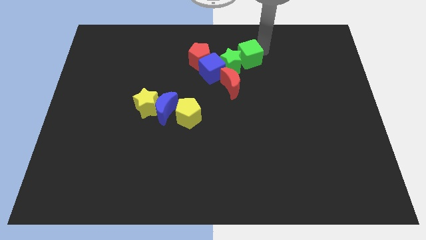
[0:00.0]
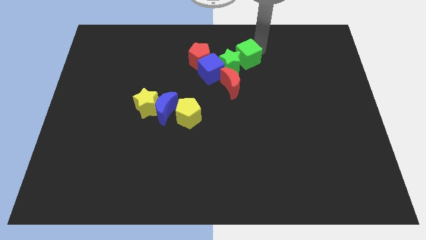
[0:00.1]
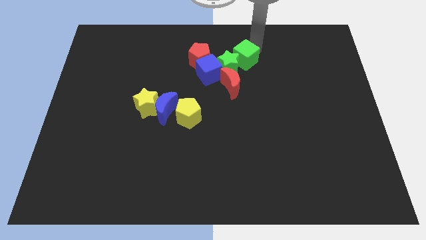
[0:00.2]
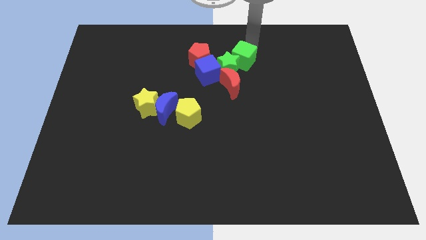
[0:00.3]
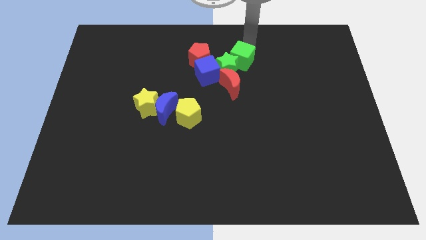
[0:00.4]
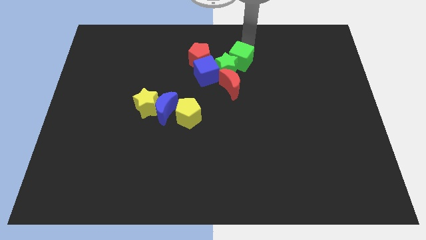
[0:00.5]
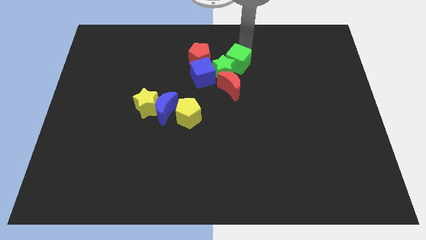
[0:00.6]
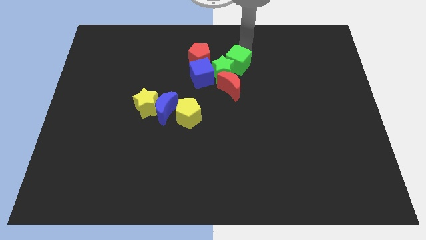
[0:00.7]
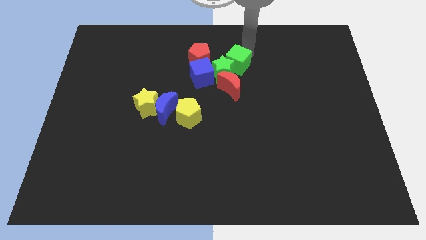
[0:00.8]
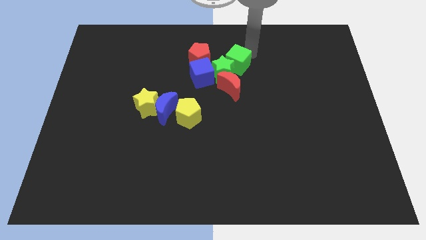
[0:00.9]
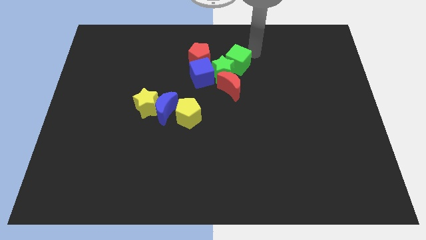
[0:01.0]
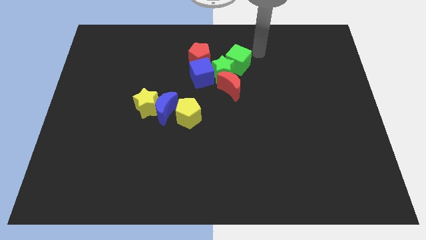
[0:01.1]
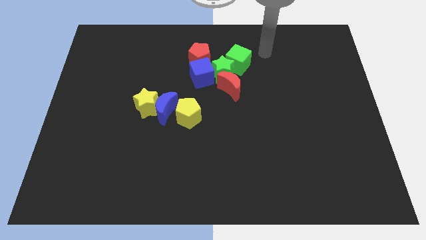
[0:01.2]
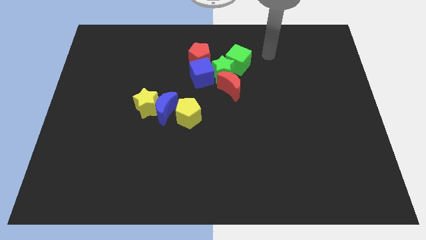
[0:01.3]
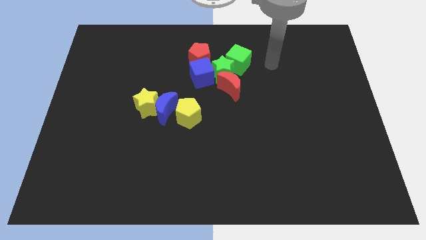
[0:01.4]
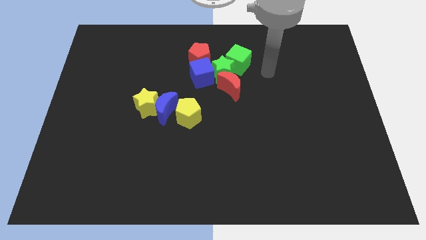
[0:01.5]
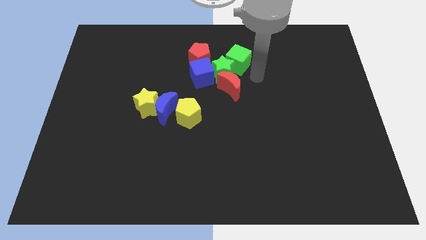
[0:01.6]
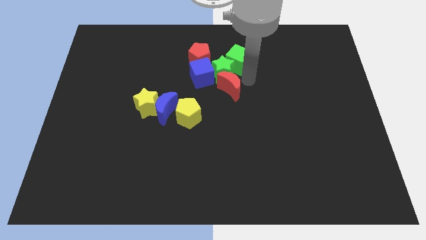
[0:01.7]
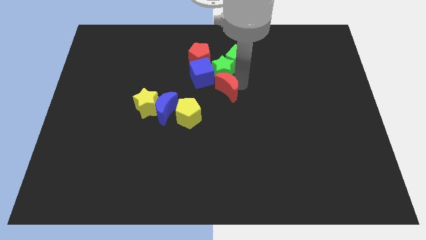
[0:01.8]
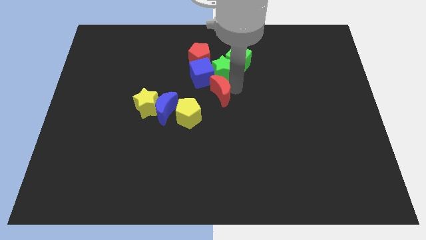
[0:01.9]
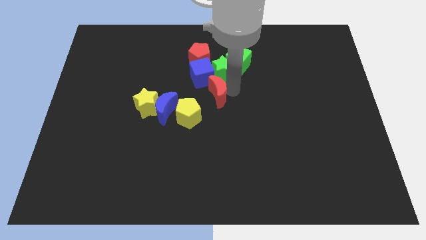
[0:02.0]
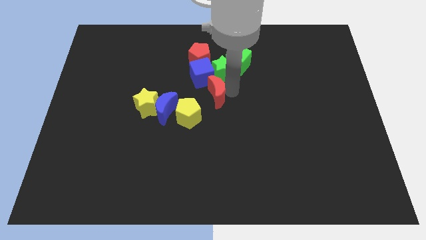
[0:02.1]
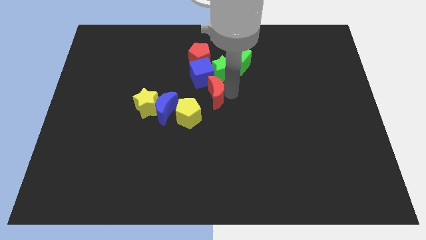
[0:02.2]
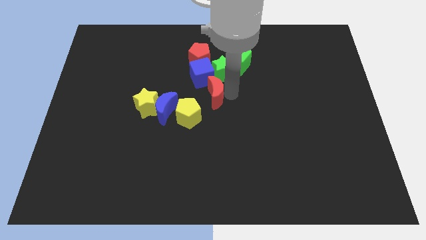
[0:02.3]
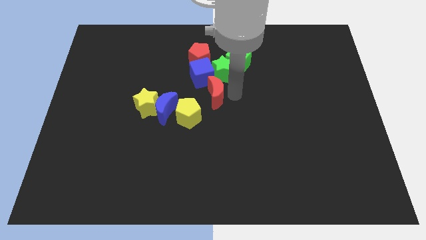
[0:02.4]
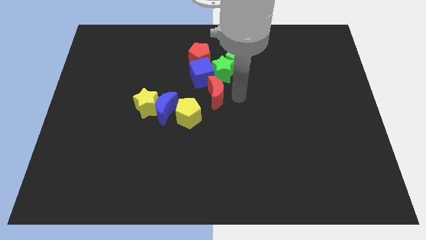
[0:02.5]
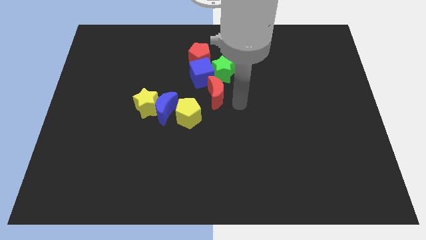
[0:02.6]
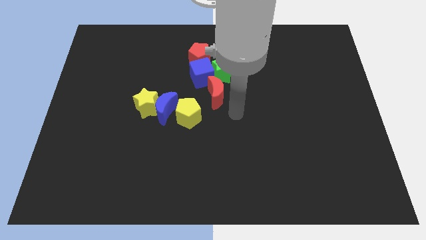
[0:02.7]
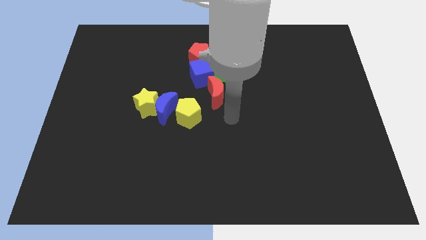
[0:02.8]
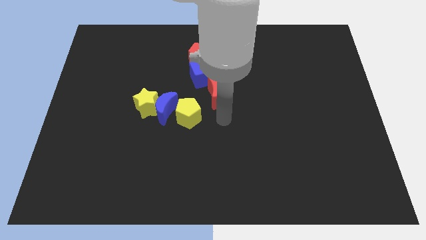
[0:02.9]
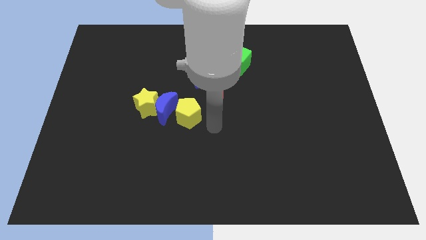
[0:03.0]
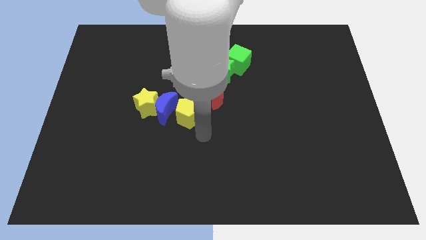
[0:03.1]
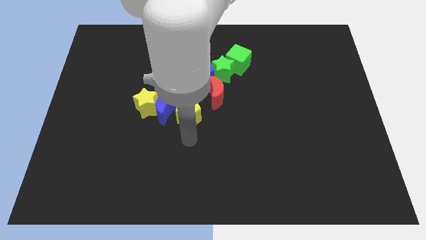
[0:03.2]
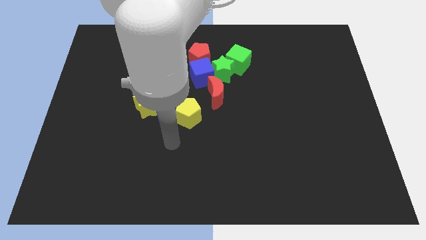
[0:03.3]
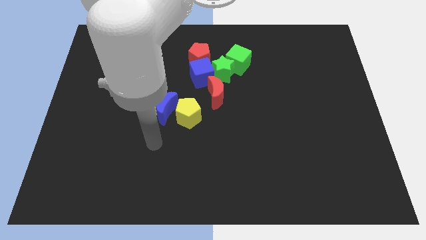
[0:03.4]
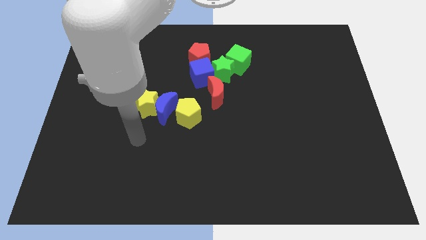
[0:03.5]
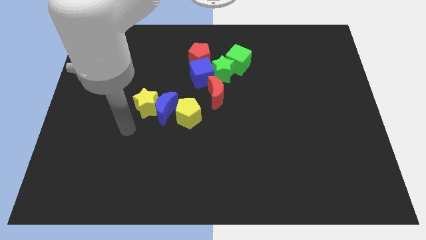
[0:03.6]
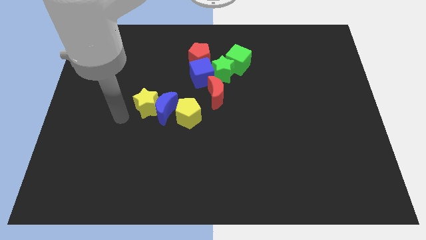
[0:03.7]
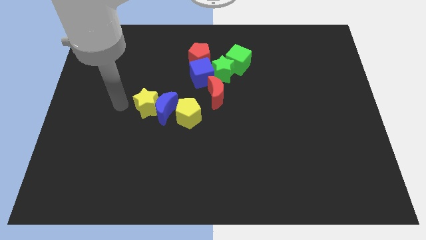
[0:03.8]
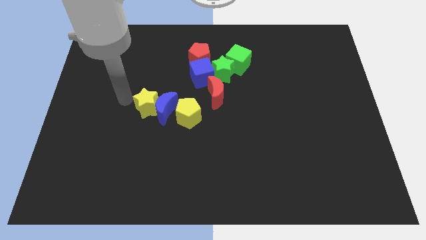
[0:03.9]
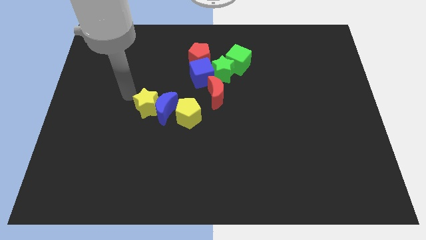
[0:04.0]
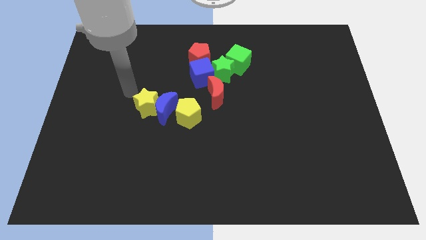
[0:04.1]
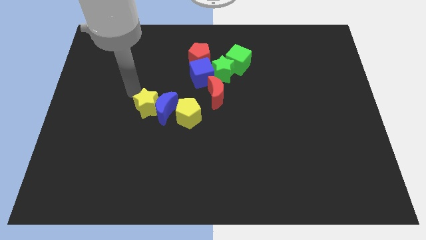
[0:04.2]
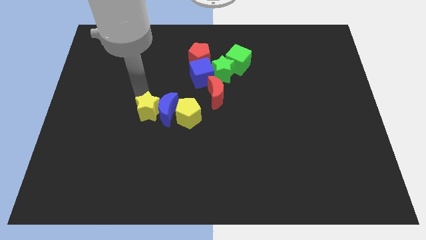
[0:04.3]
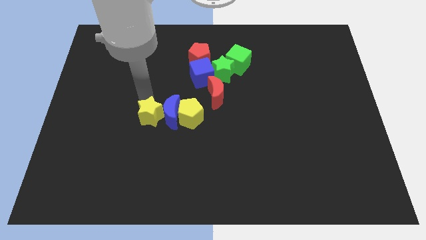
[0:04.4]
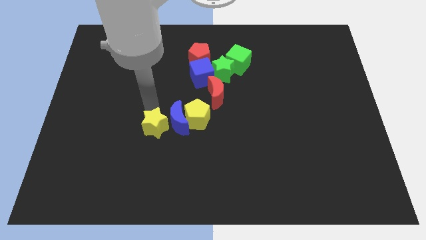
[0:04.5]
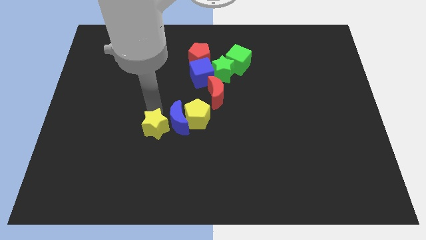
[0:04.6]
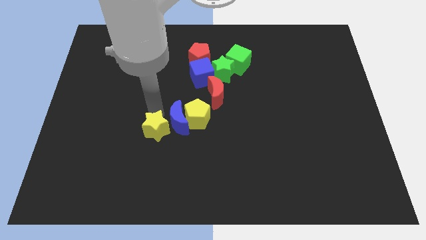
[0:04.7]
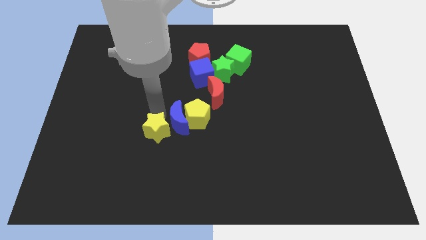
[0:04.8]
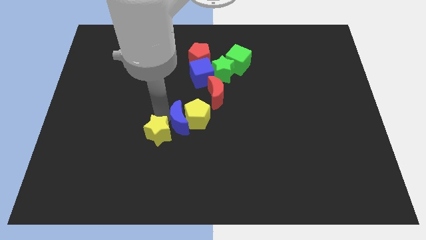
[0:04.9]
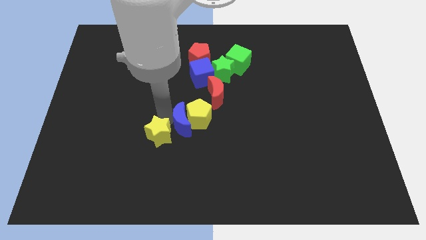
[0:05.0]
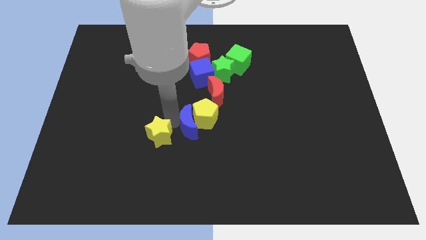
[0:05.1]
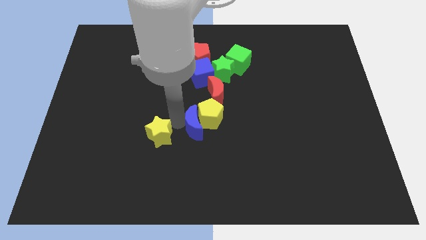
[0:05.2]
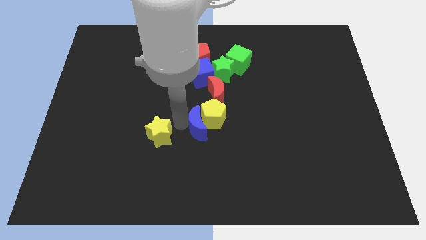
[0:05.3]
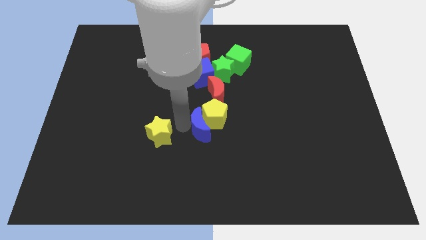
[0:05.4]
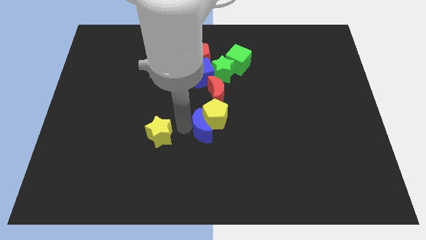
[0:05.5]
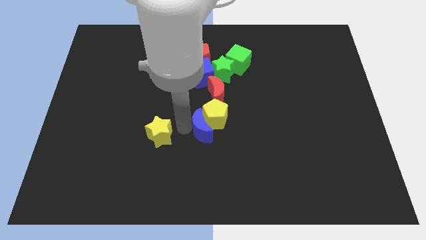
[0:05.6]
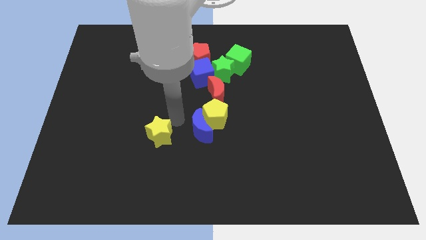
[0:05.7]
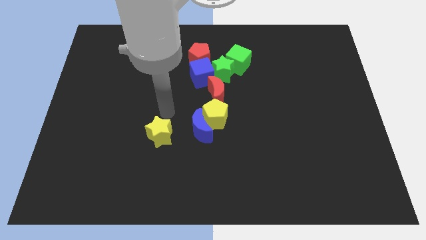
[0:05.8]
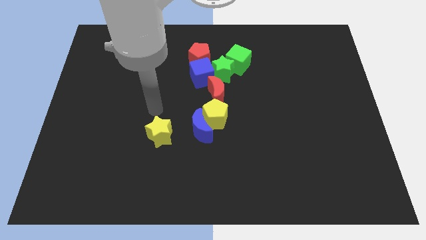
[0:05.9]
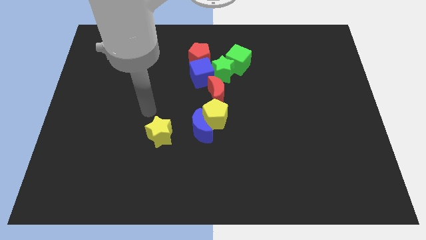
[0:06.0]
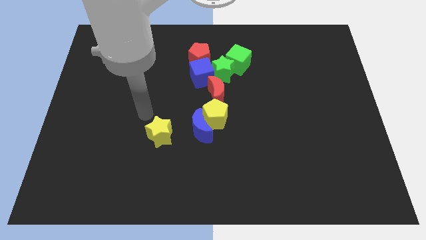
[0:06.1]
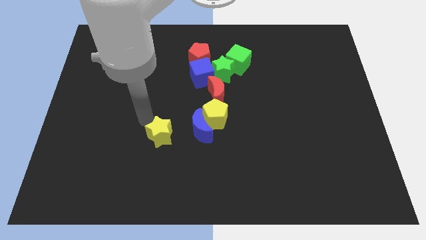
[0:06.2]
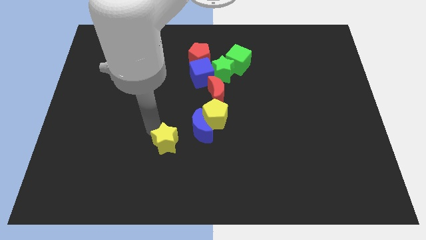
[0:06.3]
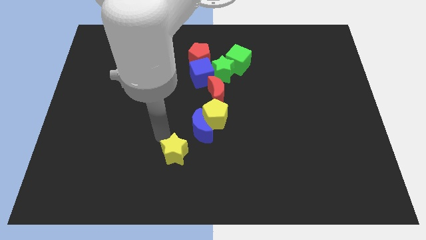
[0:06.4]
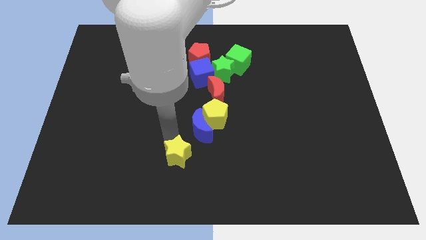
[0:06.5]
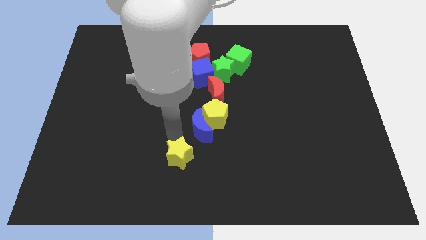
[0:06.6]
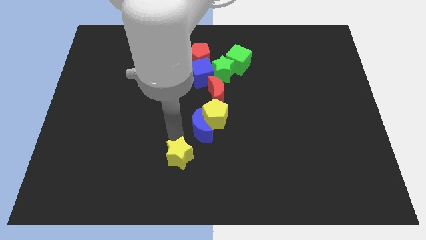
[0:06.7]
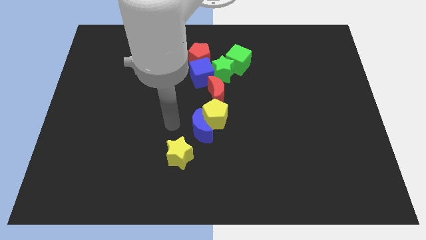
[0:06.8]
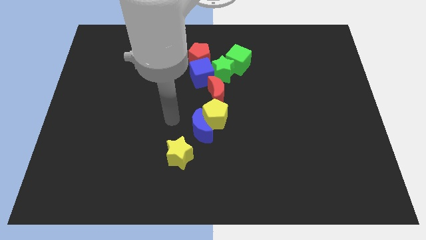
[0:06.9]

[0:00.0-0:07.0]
separate the yellow star from the blue crescent

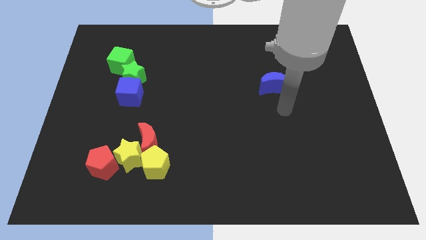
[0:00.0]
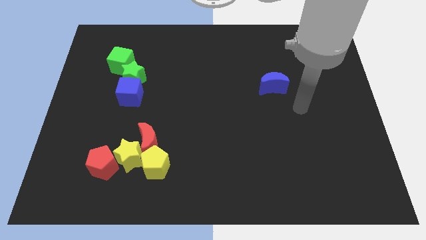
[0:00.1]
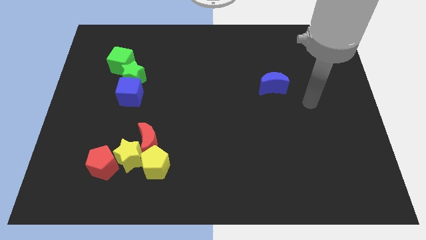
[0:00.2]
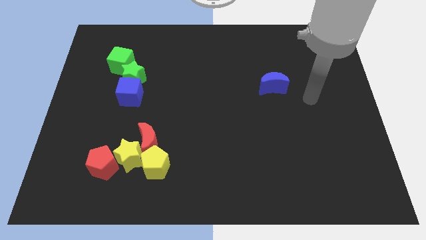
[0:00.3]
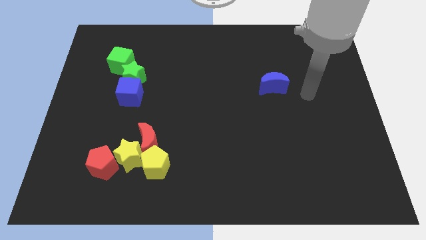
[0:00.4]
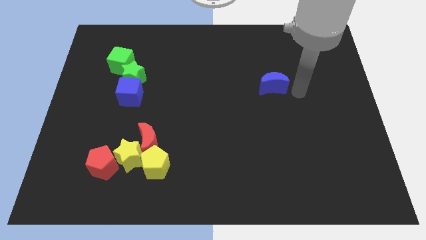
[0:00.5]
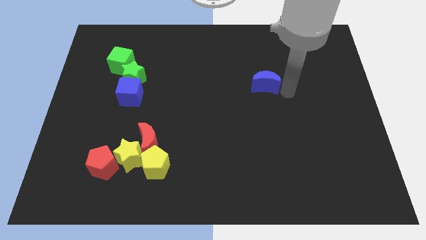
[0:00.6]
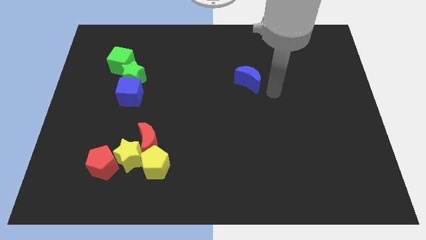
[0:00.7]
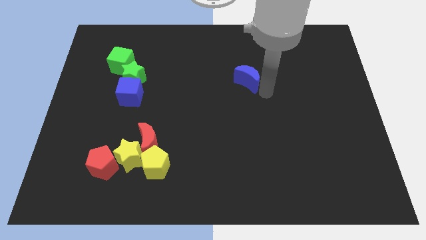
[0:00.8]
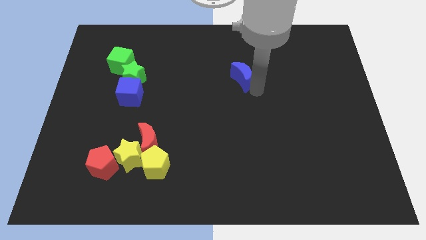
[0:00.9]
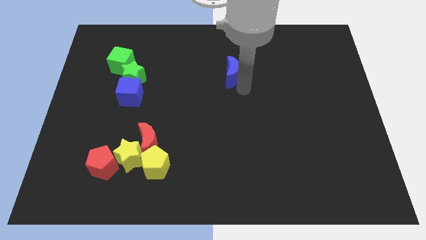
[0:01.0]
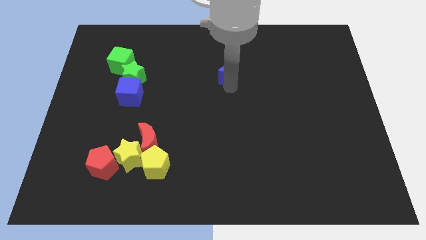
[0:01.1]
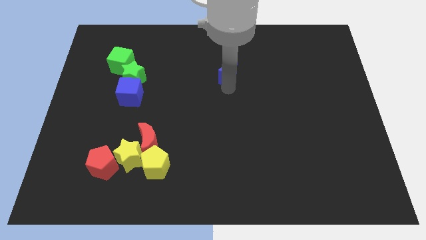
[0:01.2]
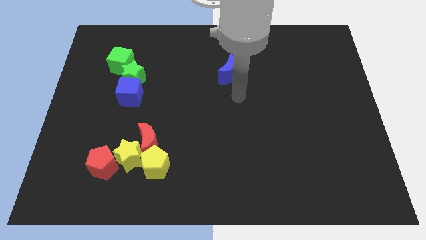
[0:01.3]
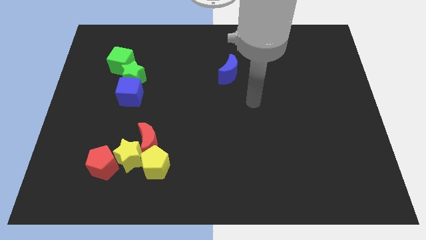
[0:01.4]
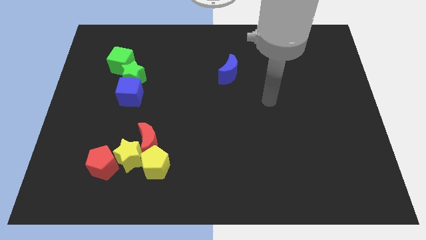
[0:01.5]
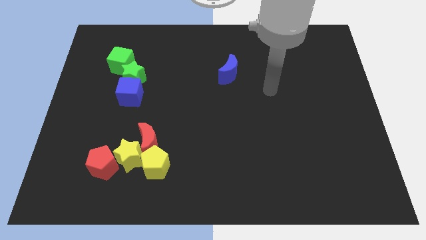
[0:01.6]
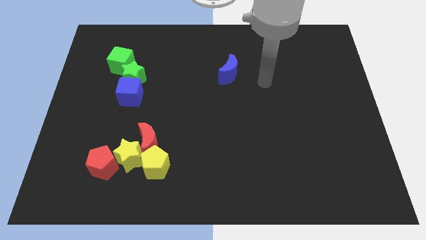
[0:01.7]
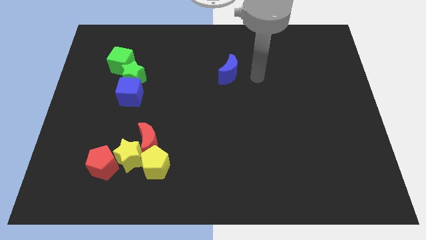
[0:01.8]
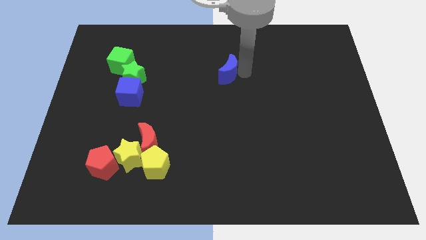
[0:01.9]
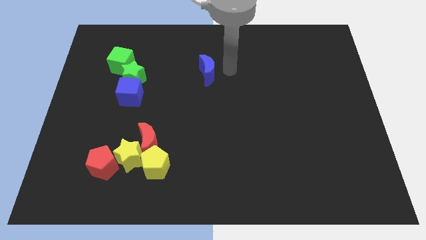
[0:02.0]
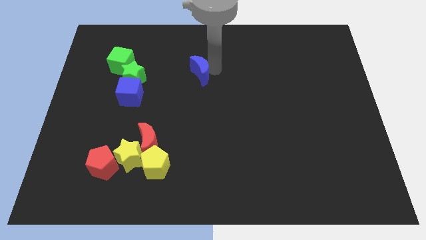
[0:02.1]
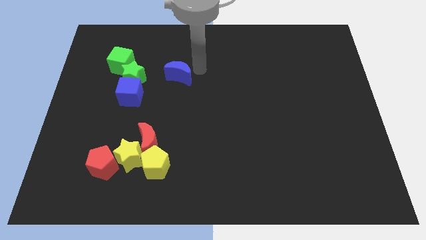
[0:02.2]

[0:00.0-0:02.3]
put the blue moon diagonally right to the blue cube
